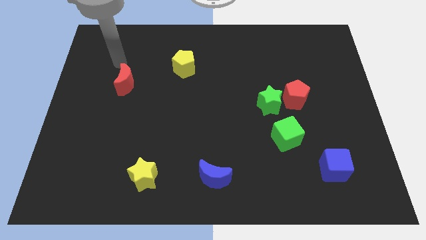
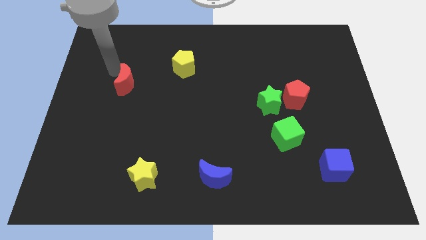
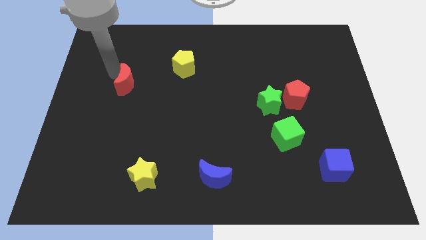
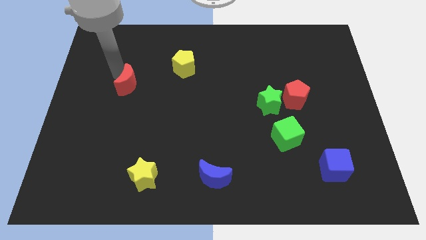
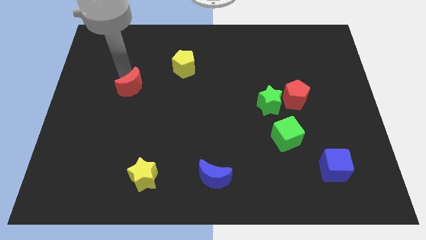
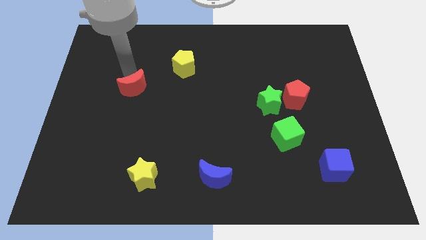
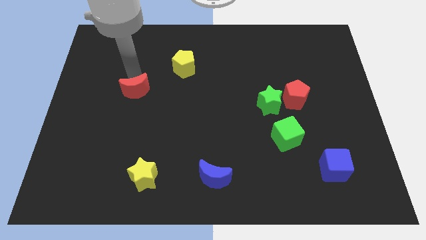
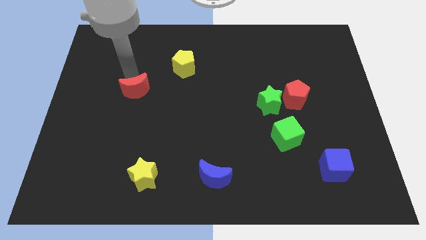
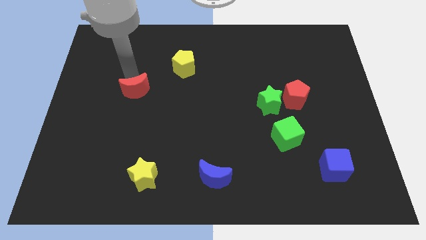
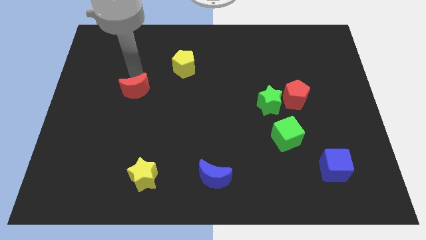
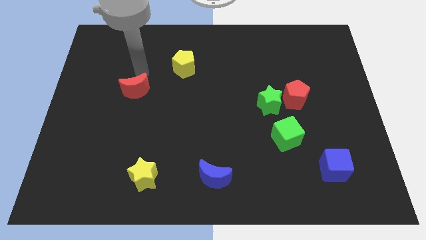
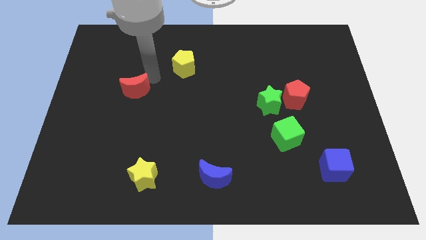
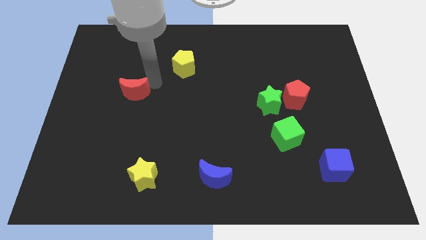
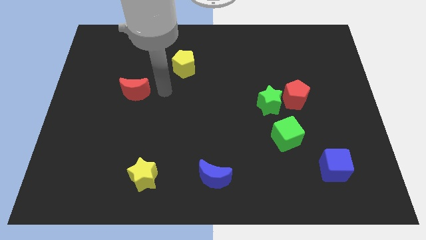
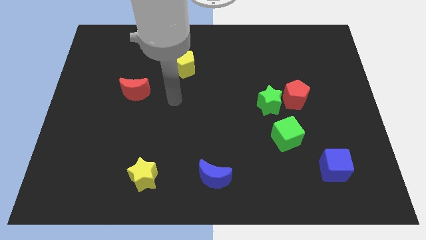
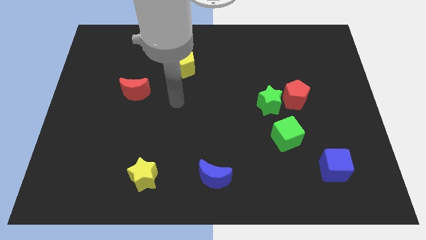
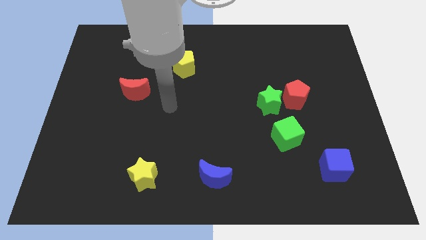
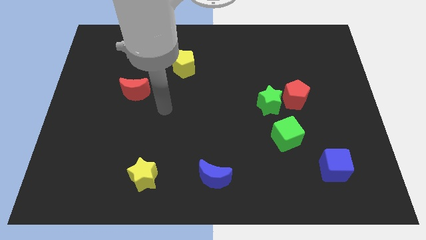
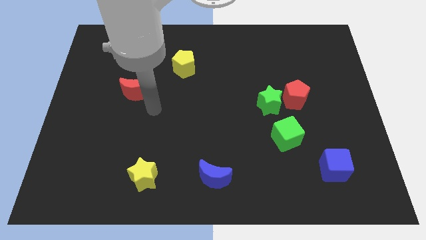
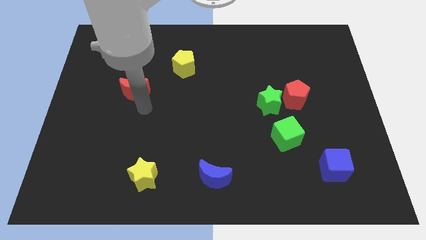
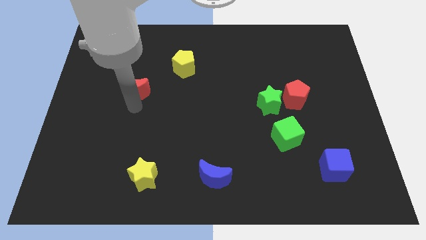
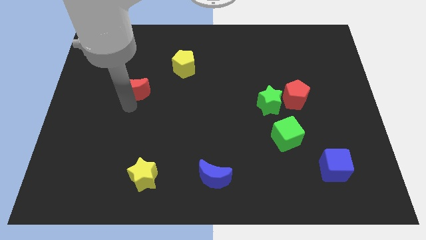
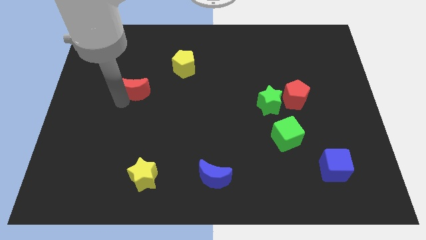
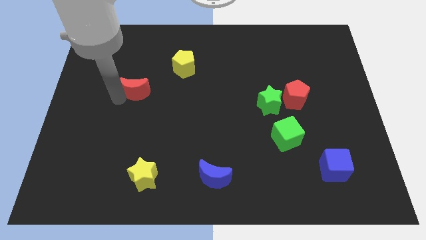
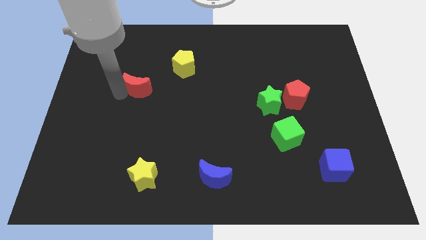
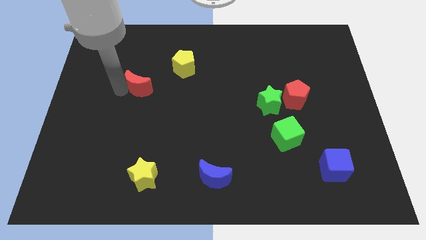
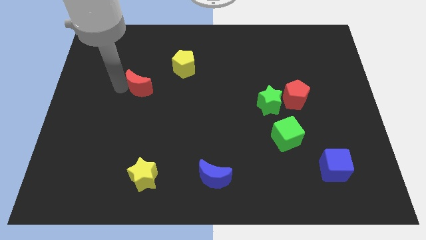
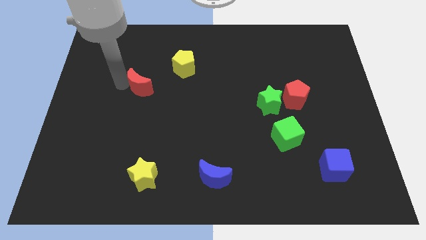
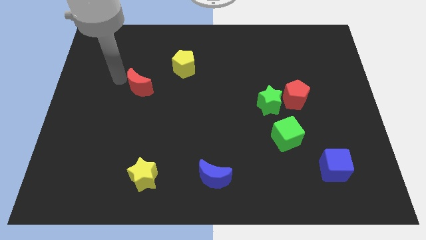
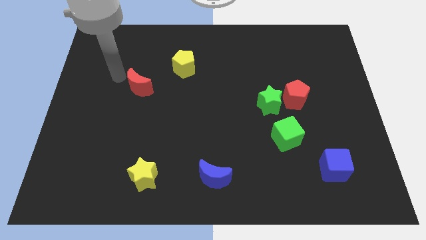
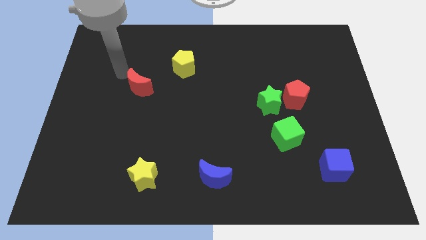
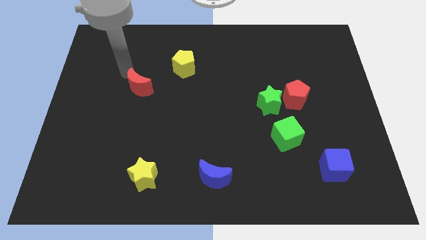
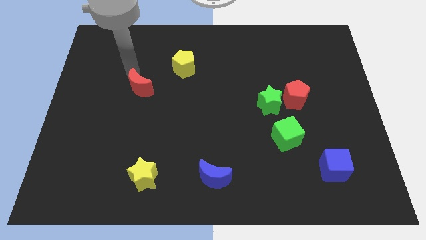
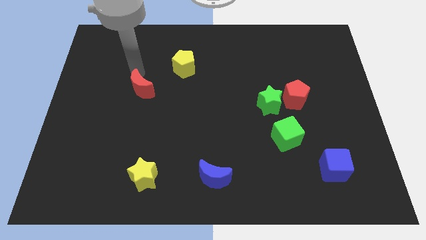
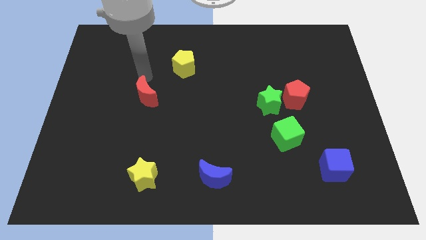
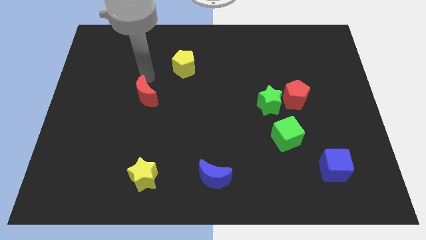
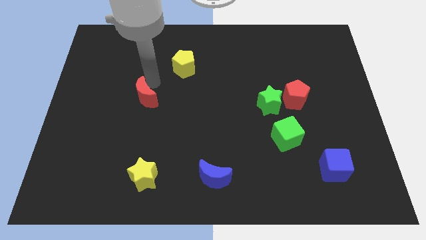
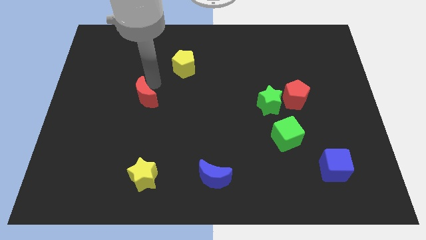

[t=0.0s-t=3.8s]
move red moon slightly down

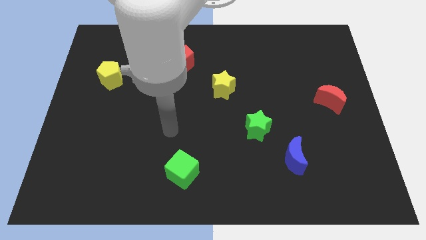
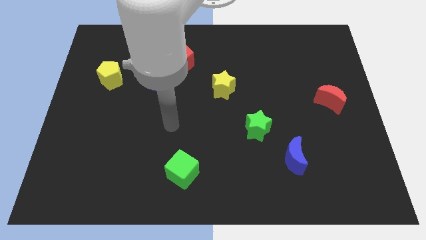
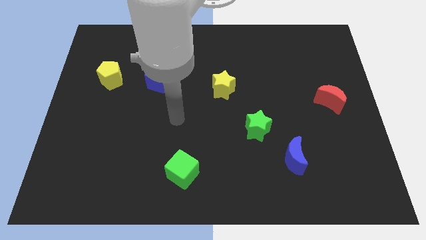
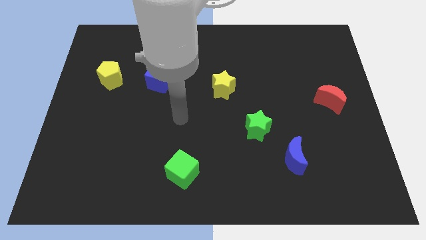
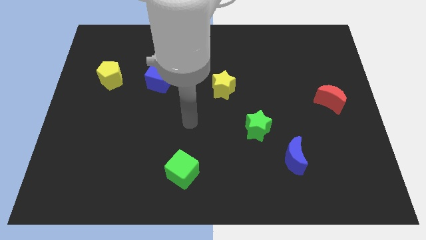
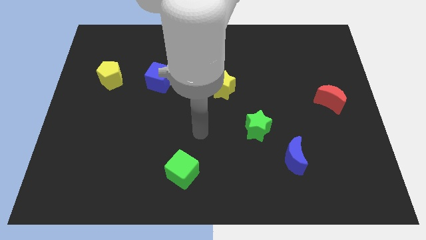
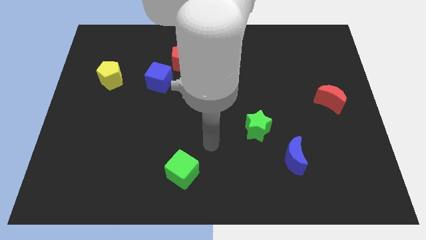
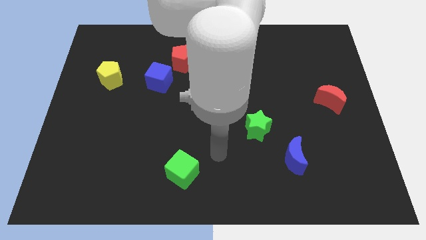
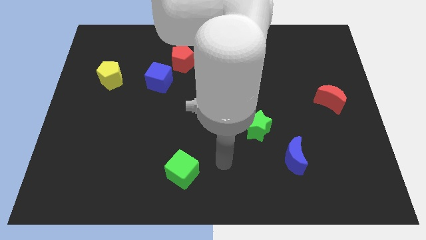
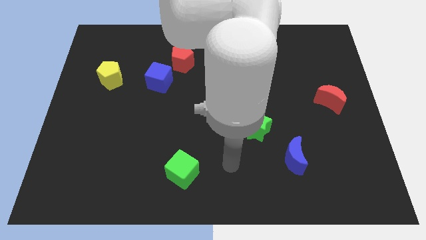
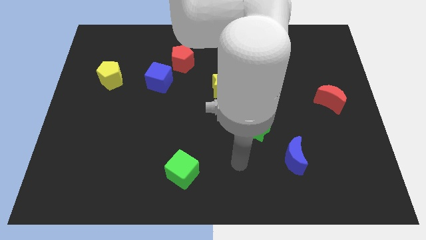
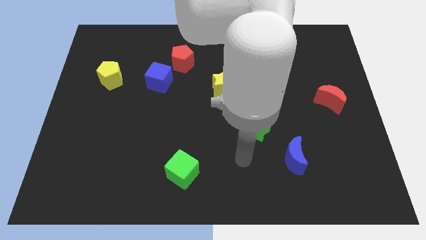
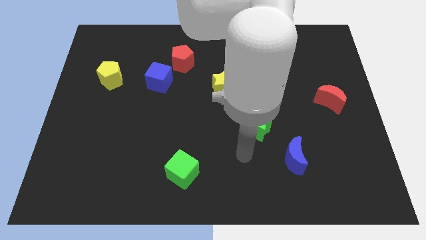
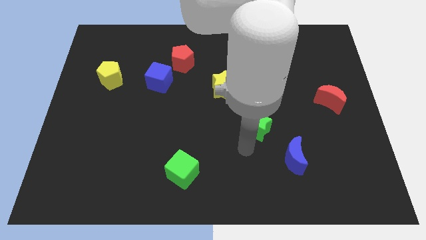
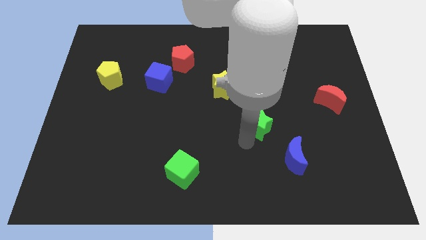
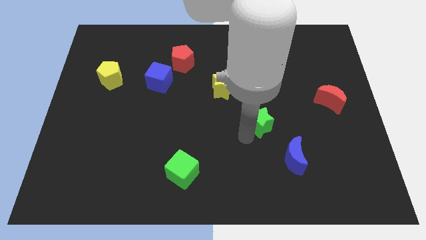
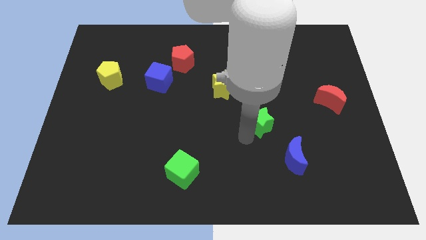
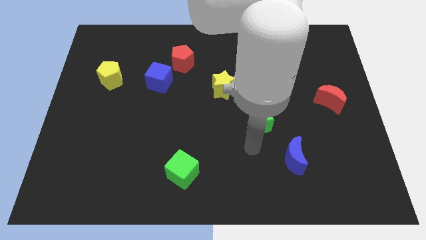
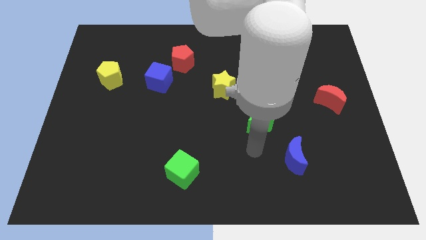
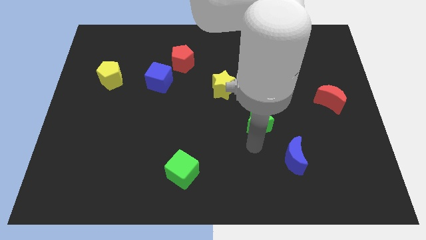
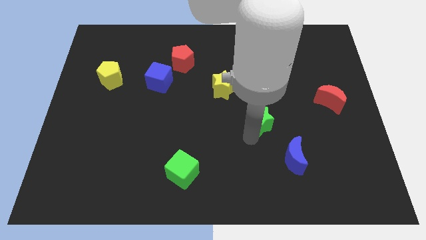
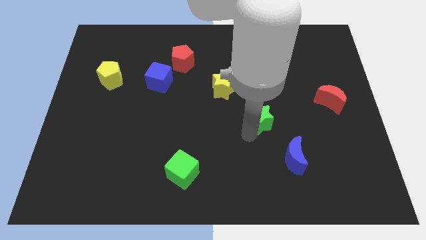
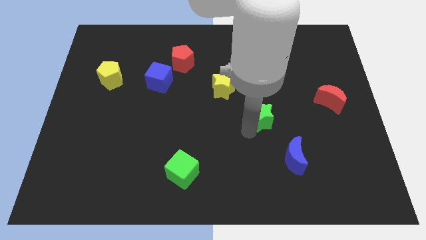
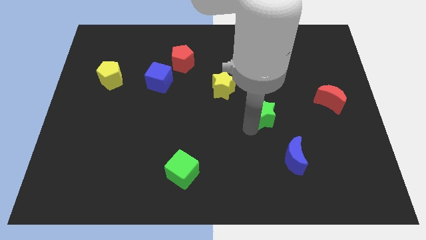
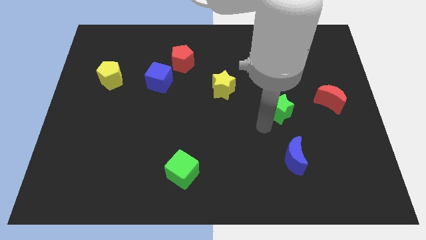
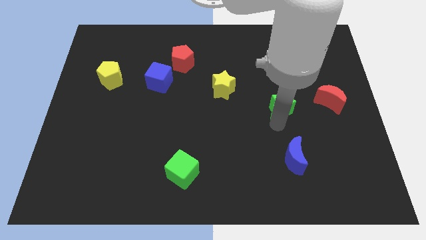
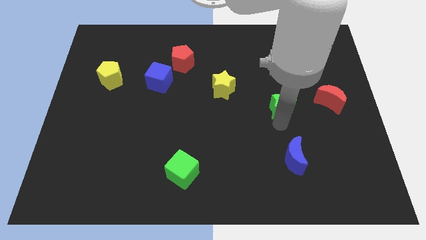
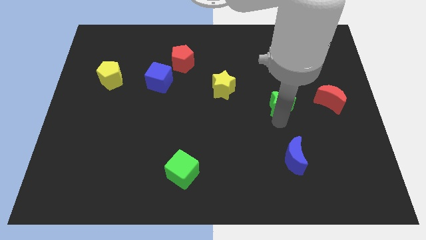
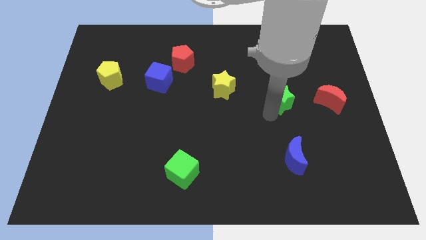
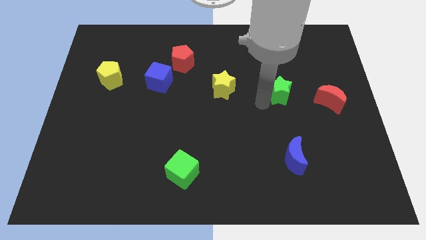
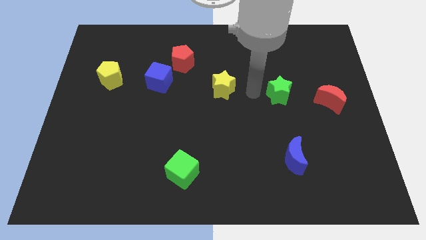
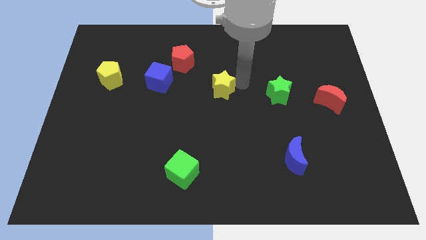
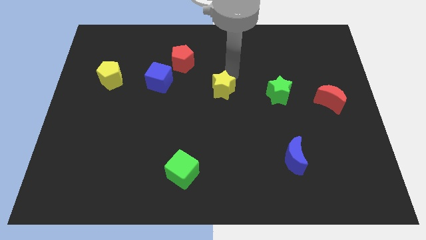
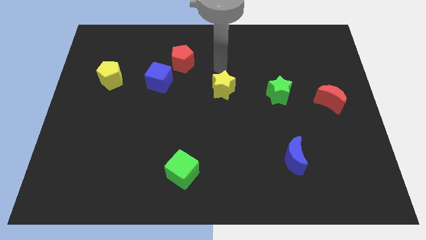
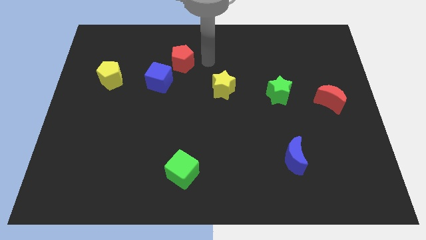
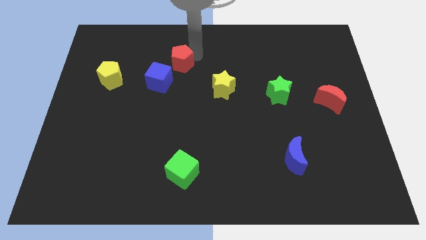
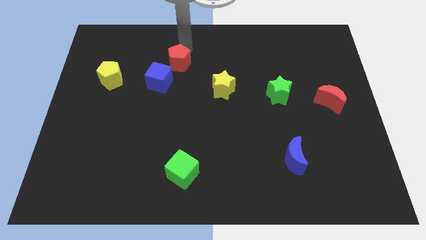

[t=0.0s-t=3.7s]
move the green star to the right of the yellow star

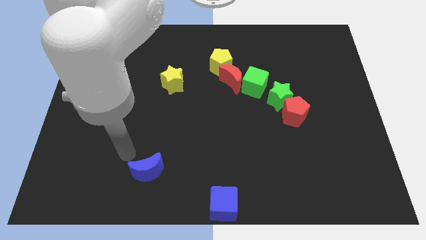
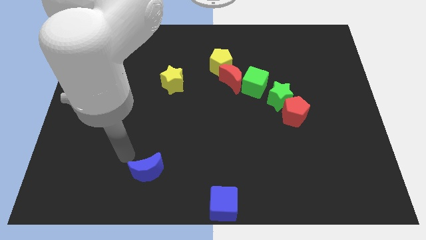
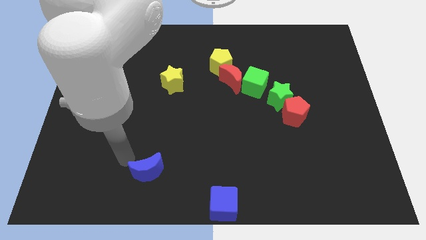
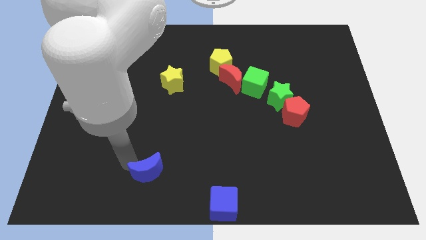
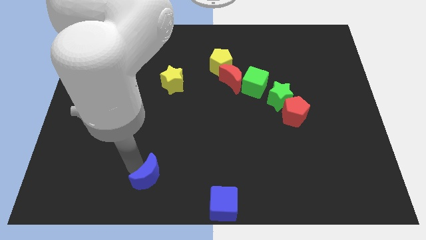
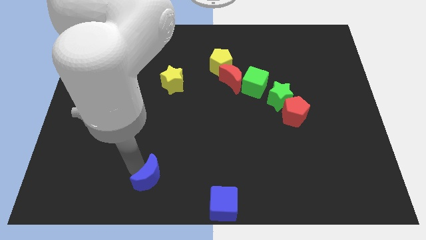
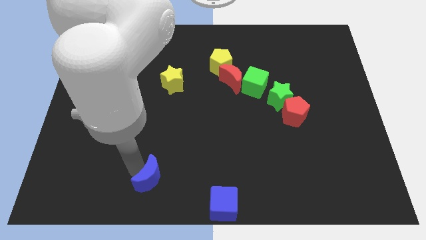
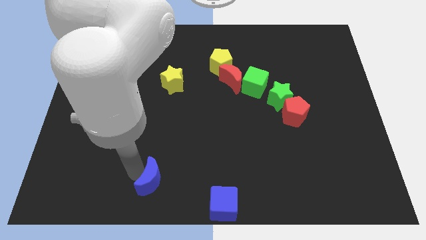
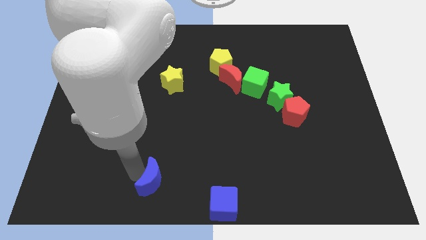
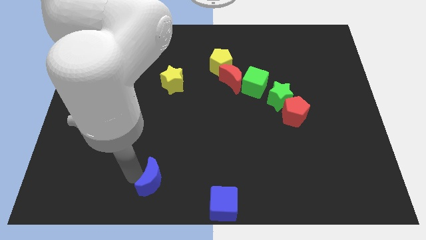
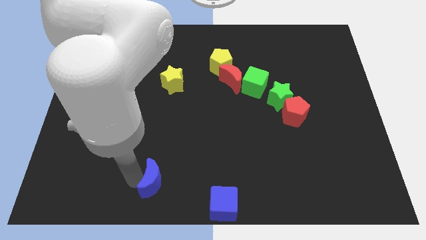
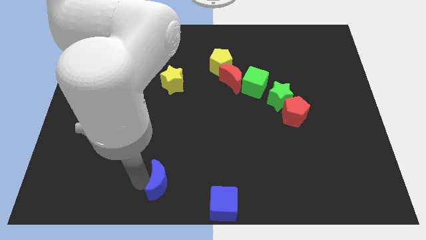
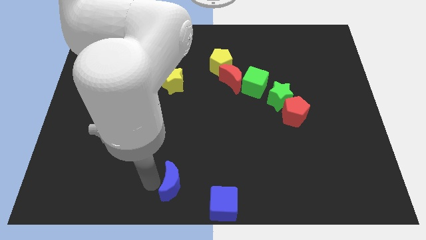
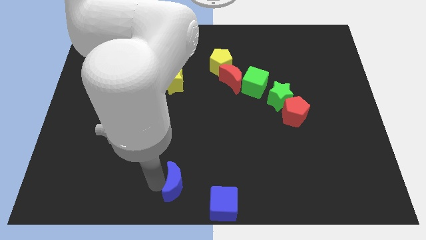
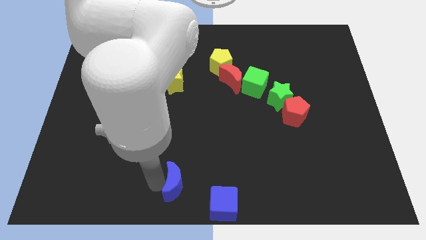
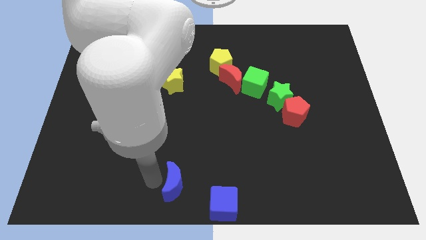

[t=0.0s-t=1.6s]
move the blue crescent towards the blue cube

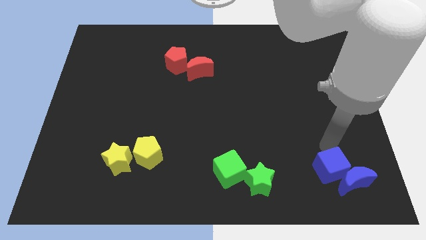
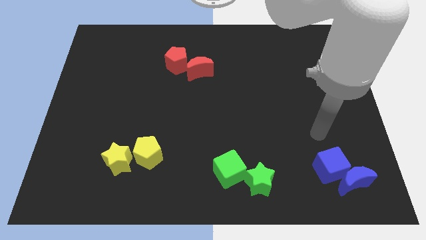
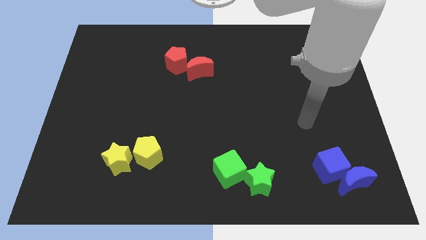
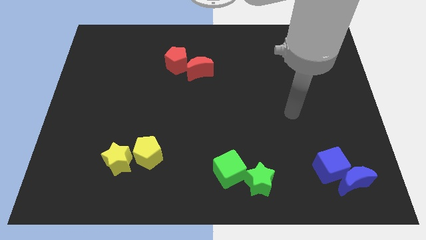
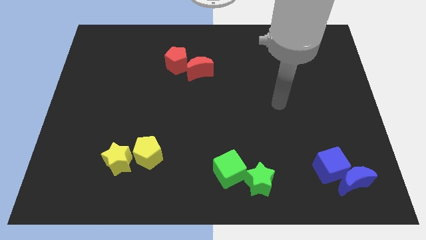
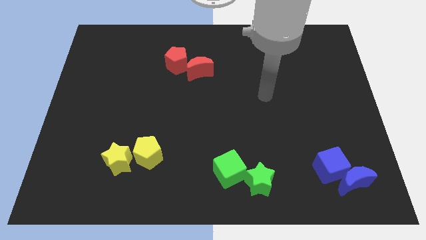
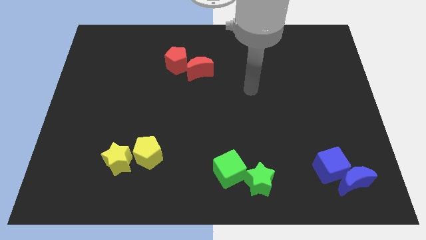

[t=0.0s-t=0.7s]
move your arm towards the center
